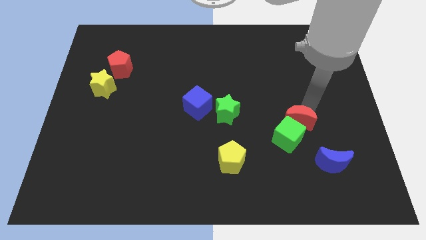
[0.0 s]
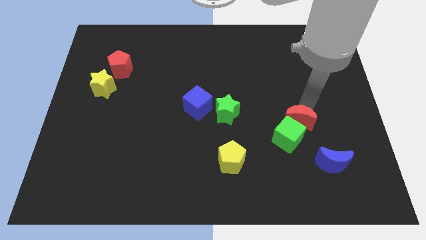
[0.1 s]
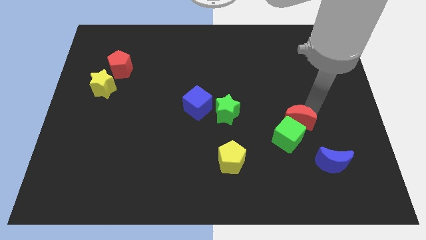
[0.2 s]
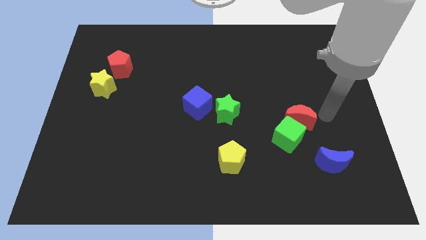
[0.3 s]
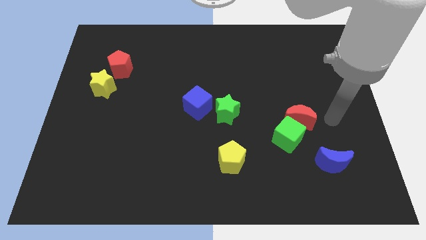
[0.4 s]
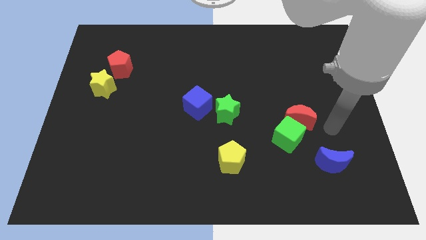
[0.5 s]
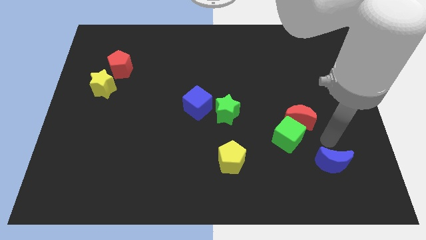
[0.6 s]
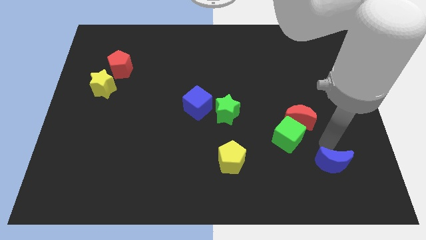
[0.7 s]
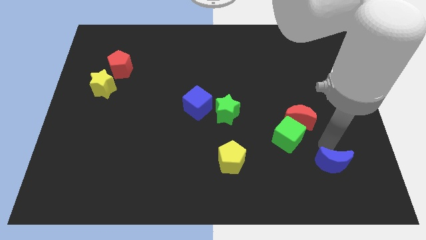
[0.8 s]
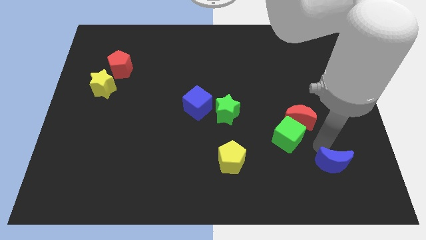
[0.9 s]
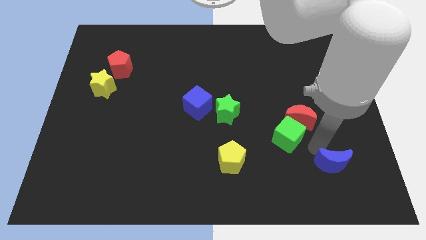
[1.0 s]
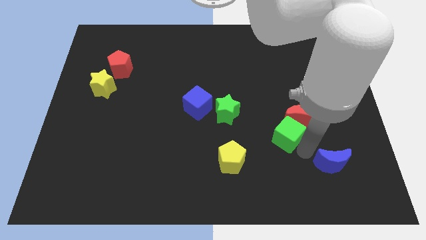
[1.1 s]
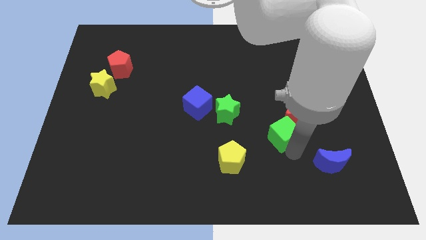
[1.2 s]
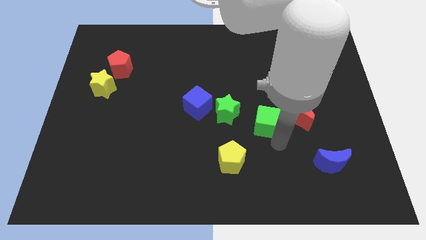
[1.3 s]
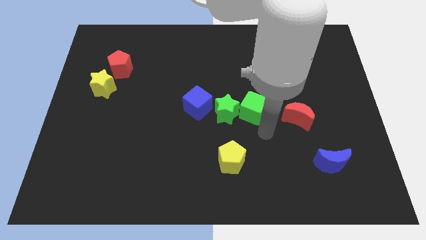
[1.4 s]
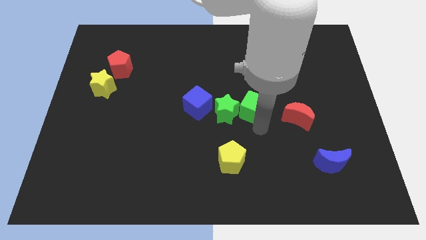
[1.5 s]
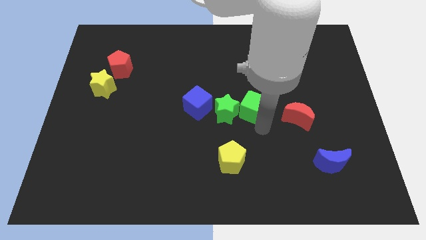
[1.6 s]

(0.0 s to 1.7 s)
separate the green cube from the red moon

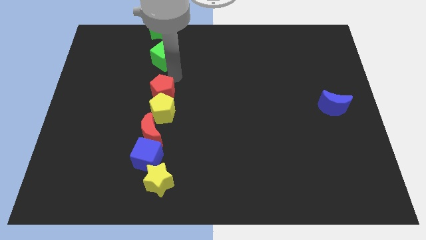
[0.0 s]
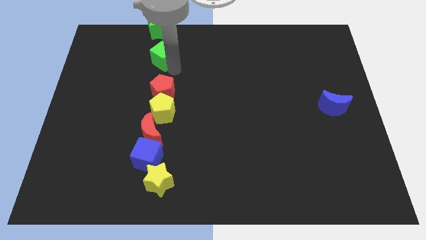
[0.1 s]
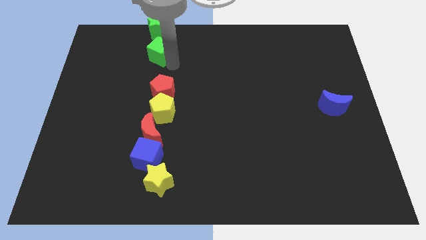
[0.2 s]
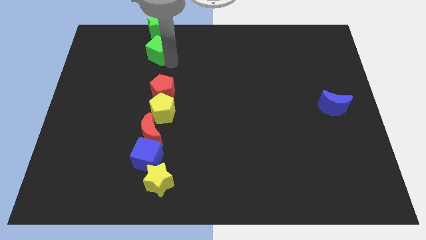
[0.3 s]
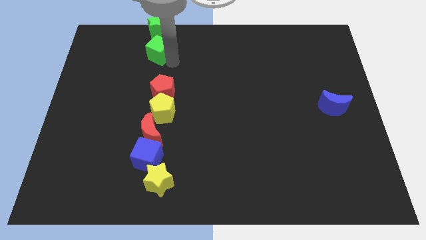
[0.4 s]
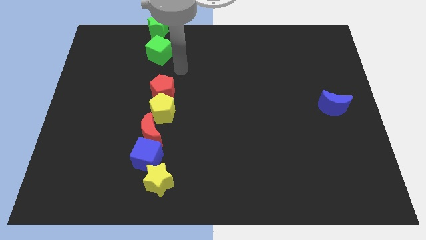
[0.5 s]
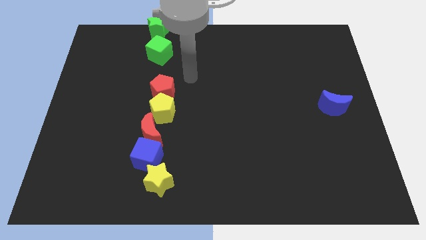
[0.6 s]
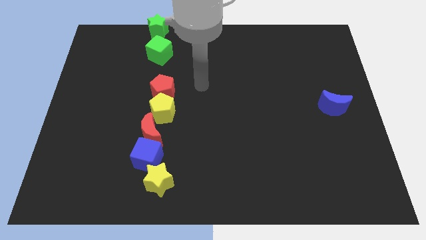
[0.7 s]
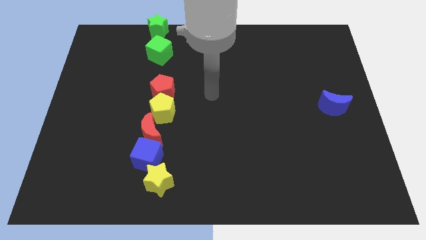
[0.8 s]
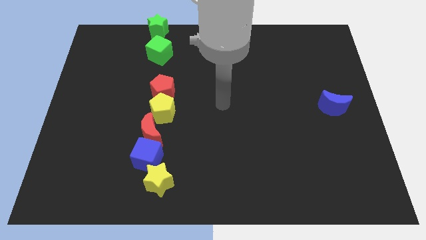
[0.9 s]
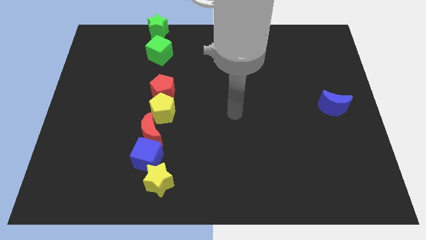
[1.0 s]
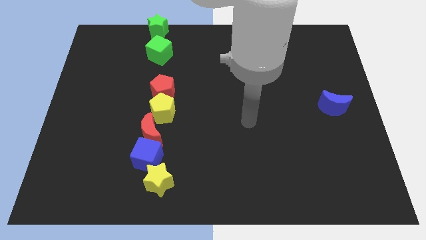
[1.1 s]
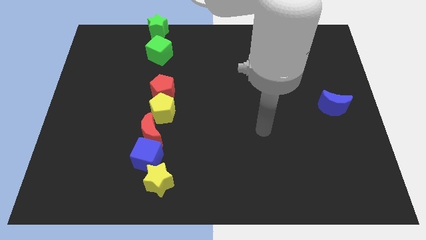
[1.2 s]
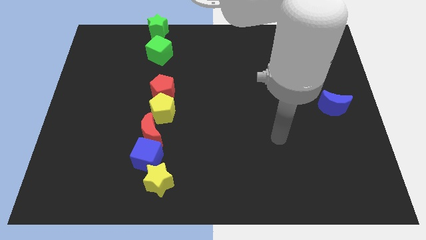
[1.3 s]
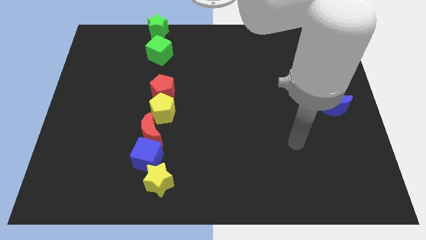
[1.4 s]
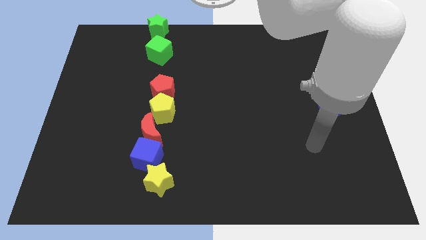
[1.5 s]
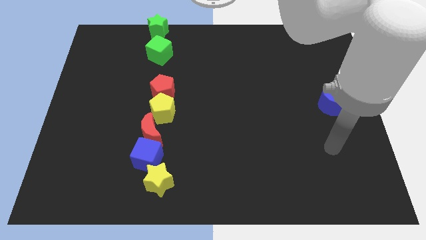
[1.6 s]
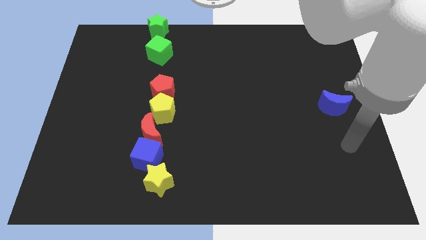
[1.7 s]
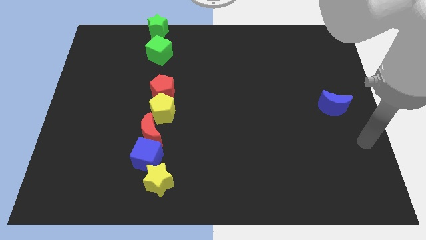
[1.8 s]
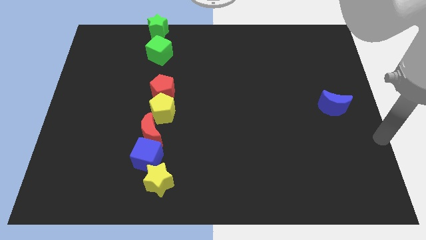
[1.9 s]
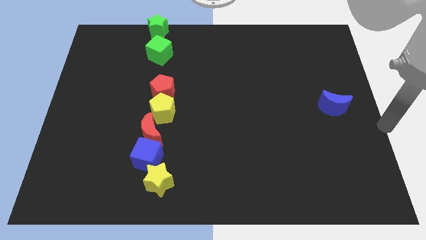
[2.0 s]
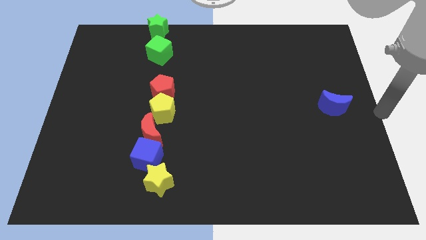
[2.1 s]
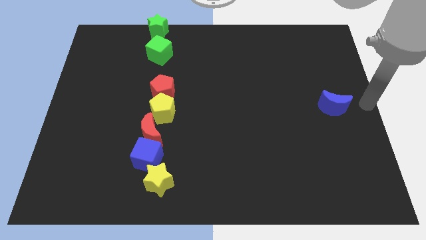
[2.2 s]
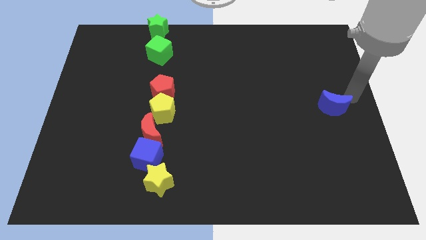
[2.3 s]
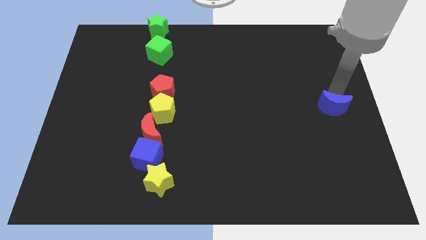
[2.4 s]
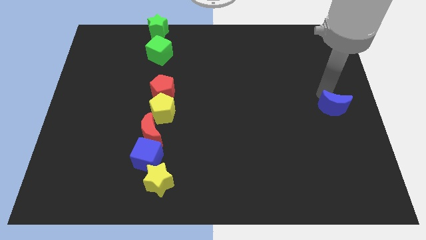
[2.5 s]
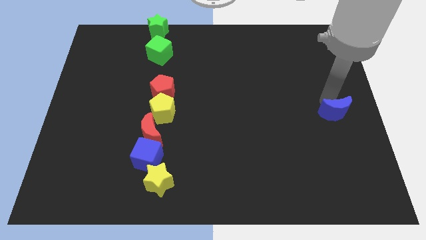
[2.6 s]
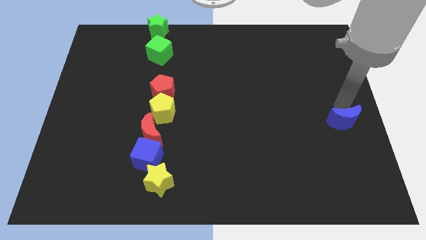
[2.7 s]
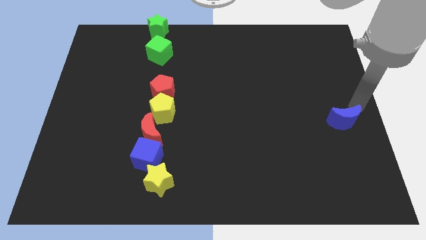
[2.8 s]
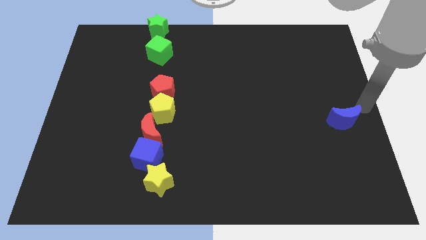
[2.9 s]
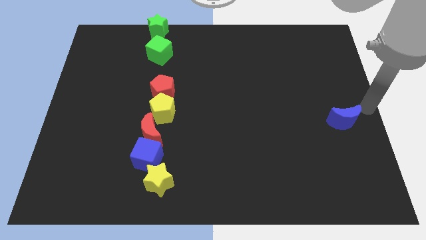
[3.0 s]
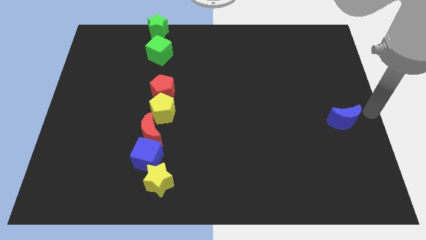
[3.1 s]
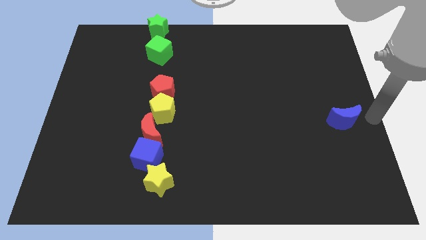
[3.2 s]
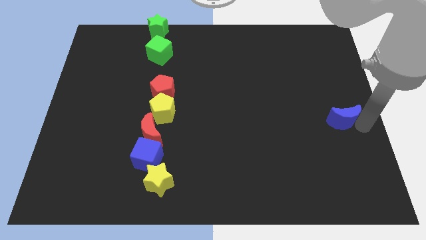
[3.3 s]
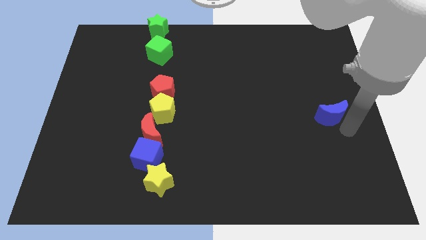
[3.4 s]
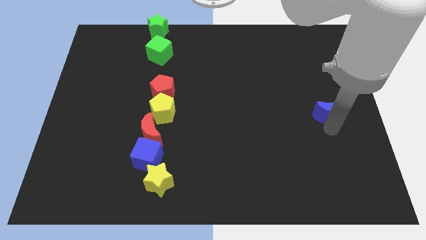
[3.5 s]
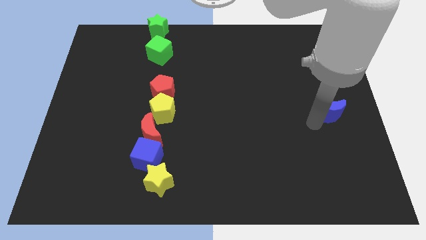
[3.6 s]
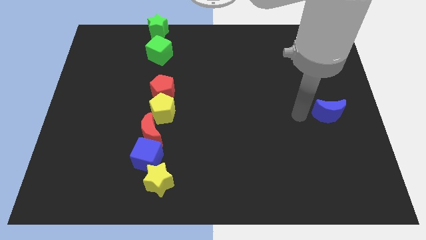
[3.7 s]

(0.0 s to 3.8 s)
adjust blue moon in the center right

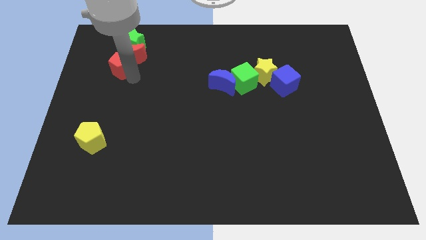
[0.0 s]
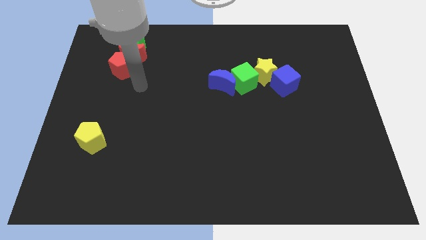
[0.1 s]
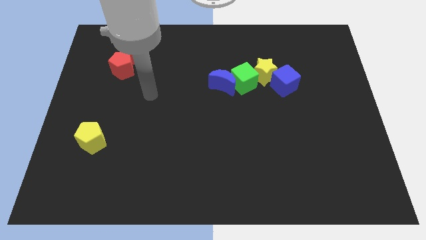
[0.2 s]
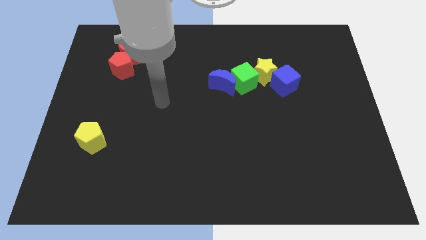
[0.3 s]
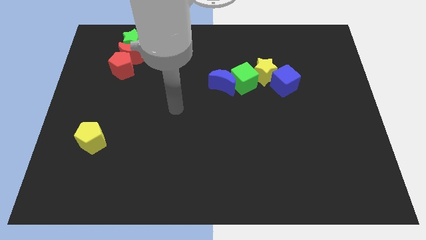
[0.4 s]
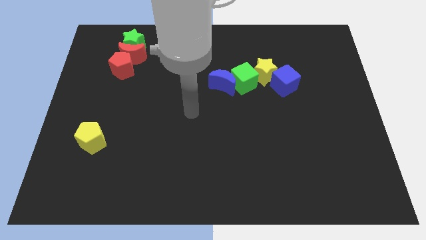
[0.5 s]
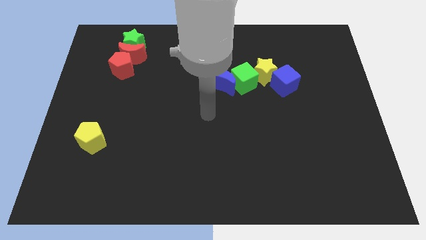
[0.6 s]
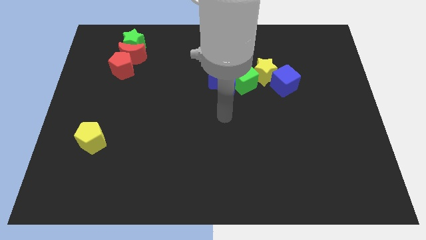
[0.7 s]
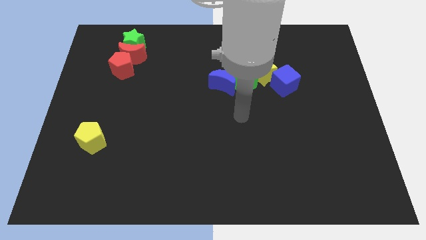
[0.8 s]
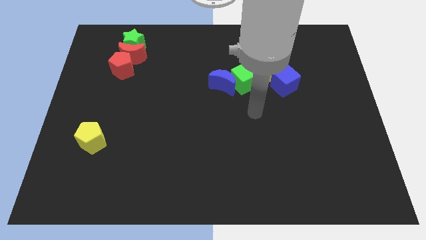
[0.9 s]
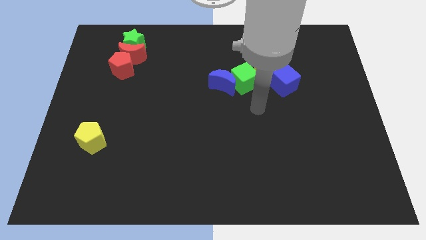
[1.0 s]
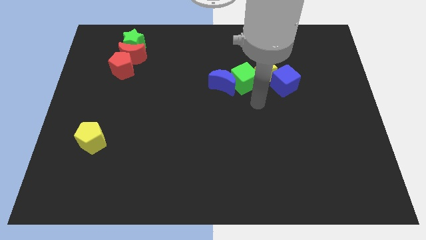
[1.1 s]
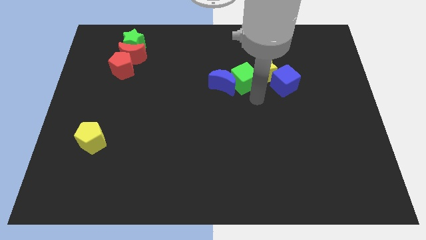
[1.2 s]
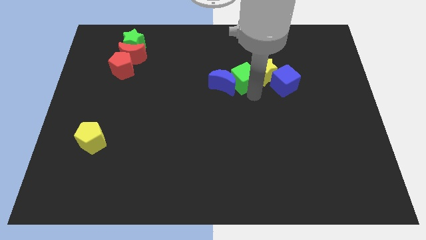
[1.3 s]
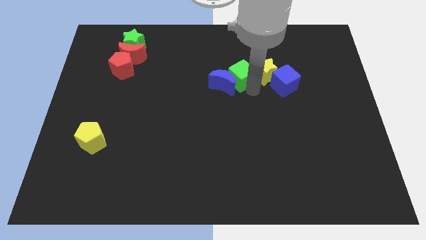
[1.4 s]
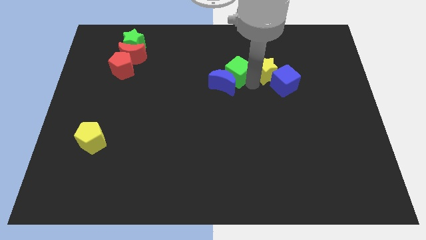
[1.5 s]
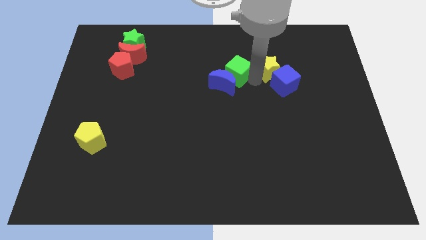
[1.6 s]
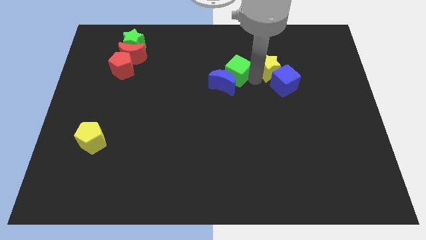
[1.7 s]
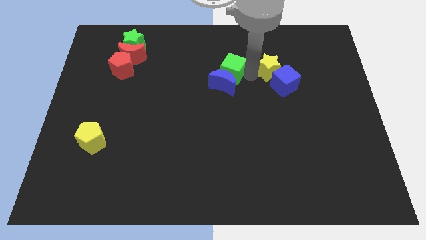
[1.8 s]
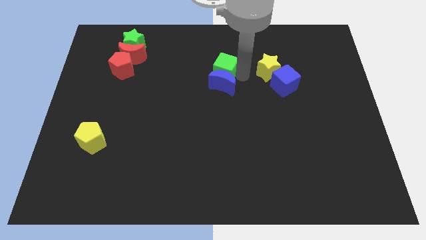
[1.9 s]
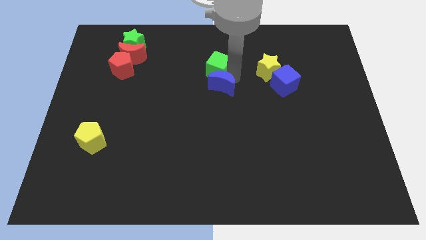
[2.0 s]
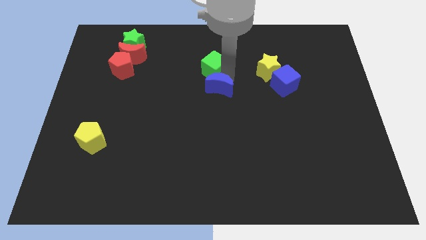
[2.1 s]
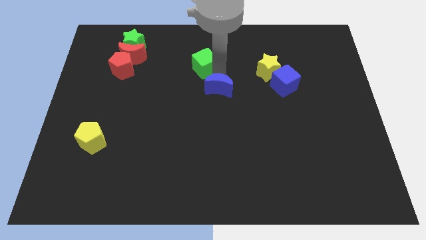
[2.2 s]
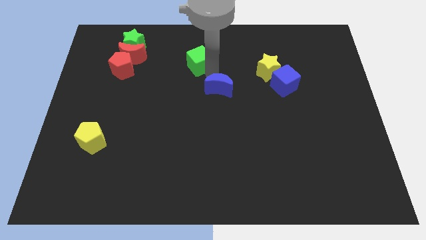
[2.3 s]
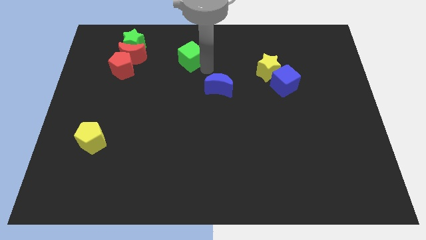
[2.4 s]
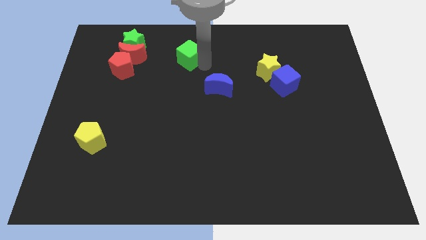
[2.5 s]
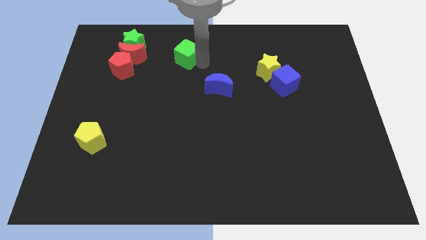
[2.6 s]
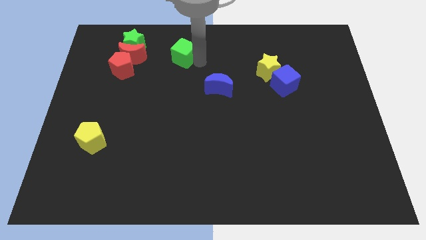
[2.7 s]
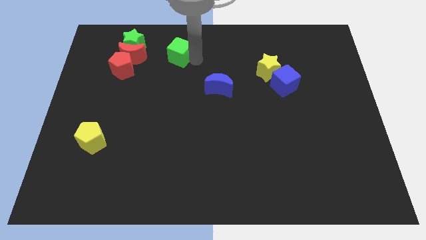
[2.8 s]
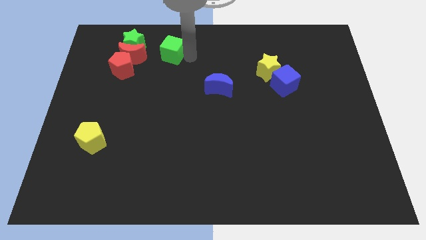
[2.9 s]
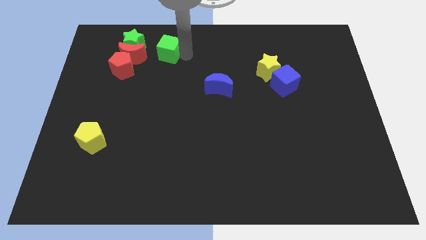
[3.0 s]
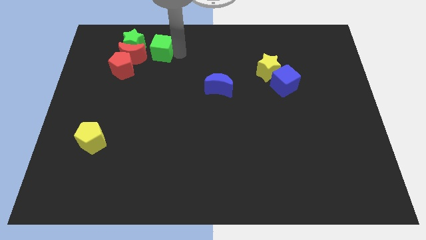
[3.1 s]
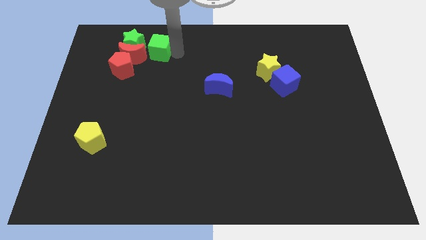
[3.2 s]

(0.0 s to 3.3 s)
separate the green cube and yellow star

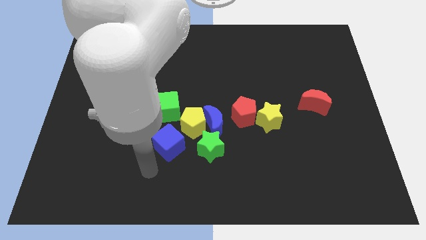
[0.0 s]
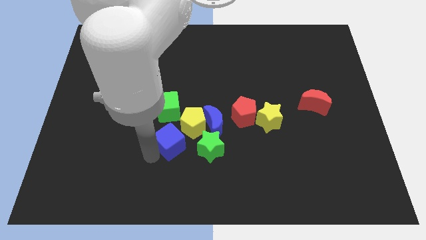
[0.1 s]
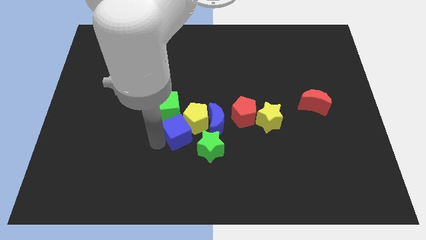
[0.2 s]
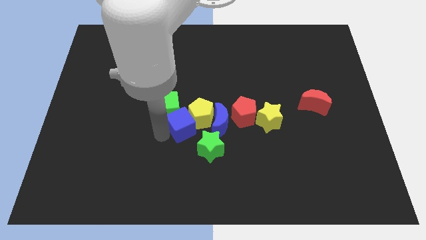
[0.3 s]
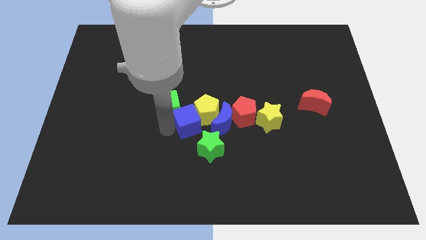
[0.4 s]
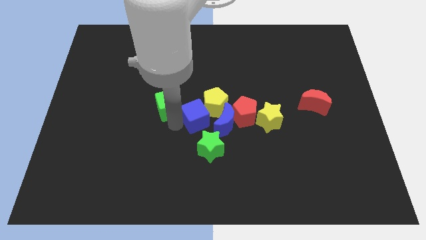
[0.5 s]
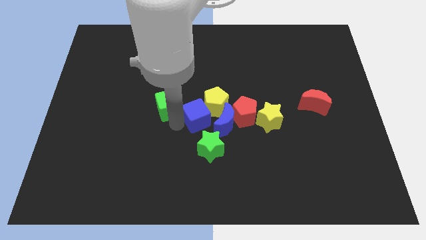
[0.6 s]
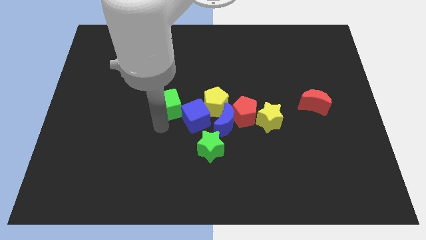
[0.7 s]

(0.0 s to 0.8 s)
push the blue cube into the yellow pentagon
